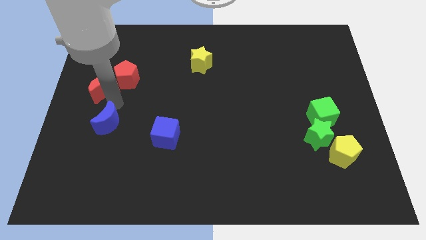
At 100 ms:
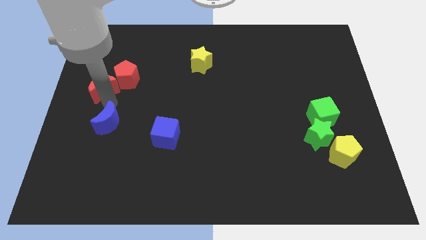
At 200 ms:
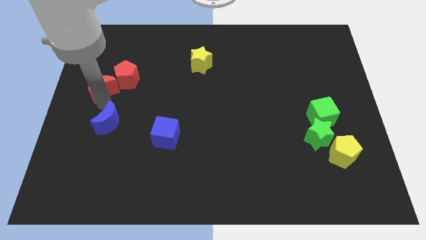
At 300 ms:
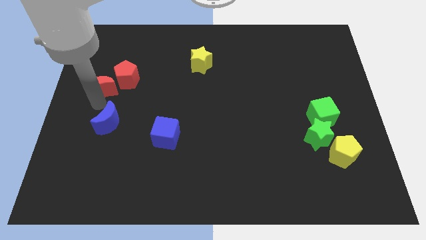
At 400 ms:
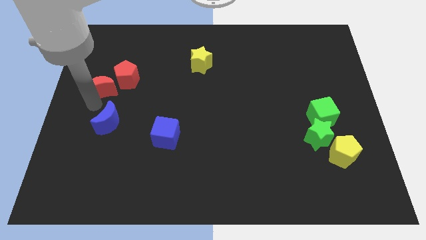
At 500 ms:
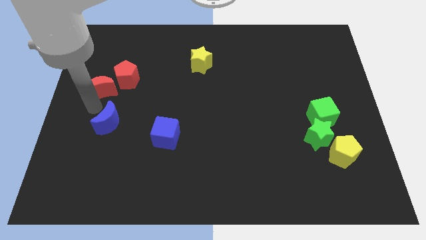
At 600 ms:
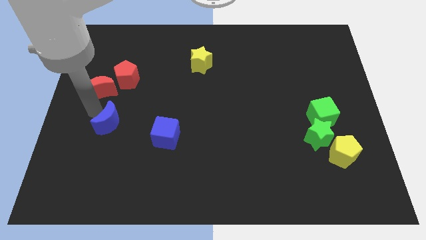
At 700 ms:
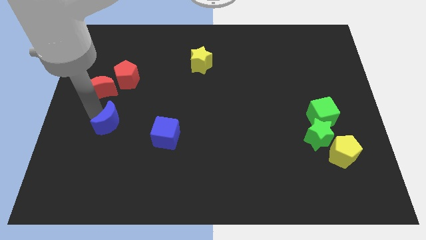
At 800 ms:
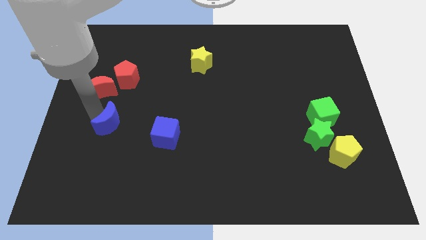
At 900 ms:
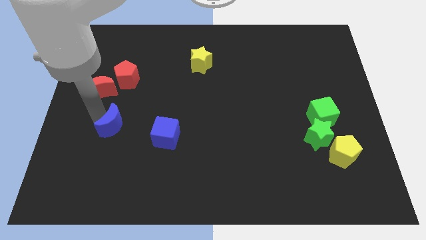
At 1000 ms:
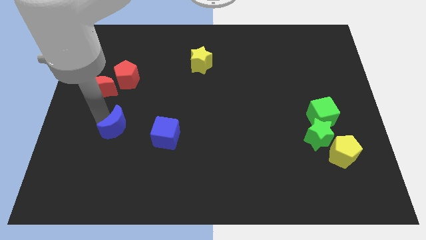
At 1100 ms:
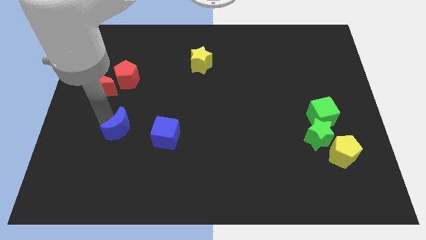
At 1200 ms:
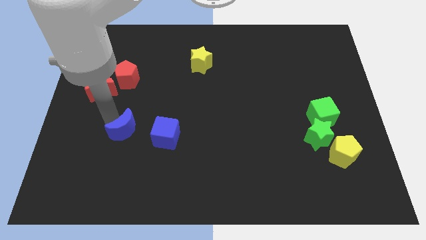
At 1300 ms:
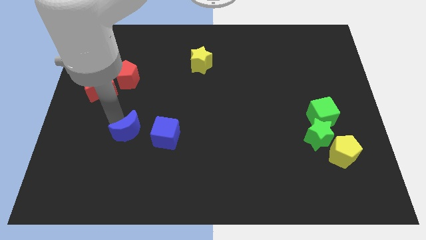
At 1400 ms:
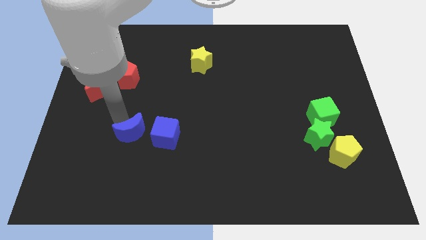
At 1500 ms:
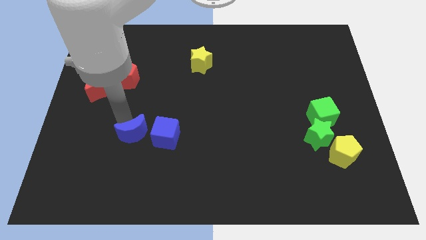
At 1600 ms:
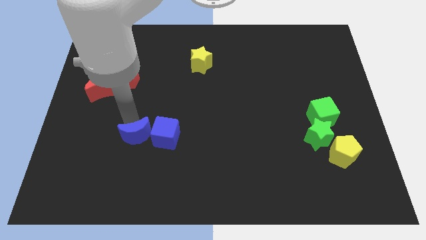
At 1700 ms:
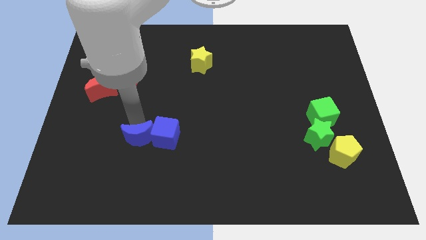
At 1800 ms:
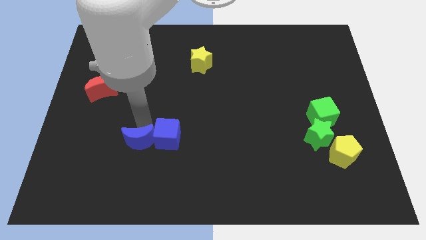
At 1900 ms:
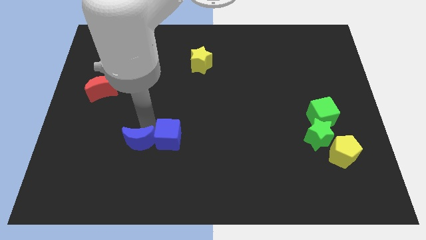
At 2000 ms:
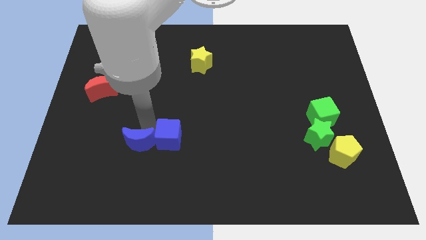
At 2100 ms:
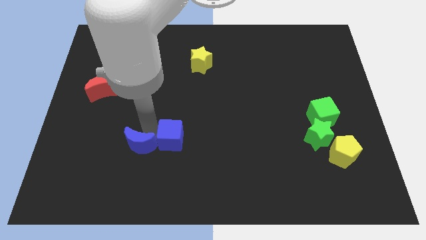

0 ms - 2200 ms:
slide the blue moon into the blue cube

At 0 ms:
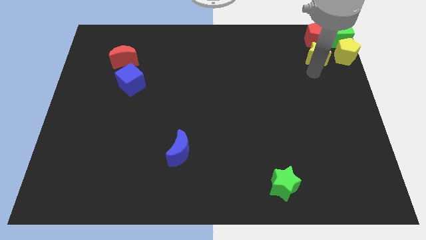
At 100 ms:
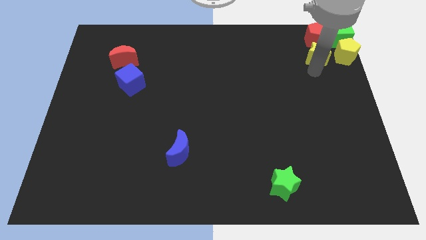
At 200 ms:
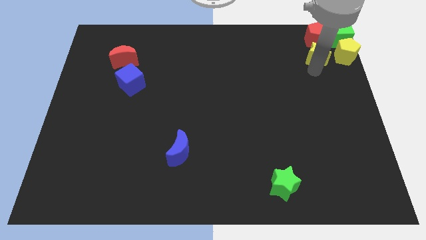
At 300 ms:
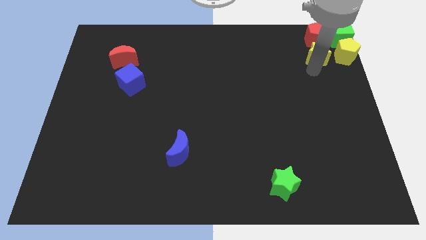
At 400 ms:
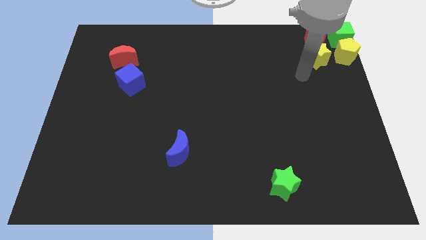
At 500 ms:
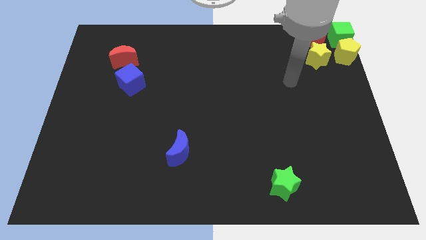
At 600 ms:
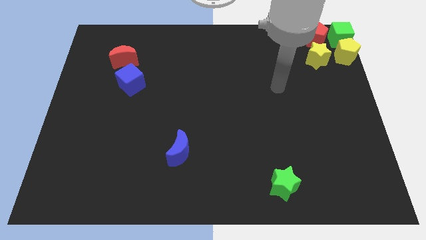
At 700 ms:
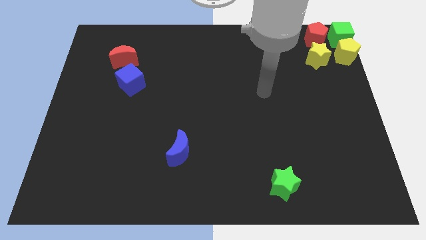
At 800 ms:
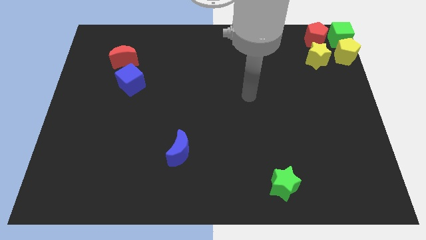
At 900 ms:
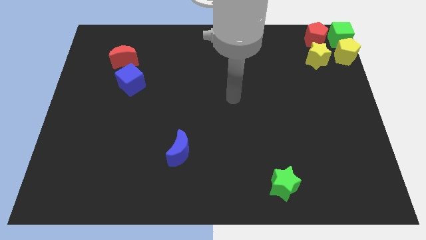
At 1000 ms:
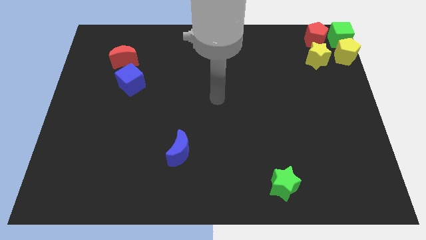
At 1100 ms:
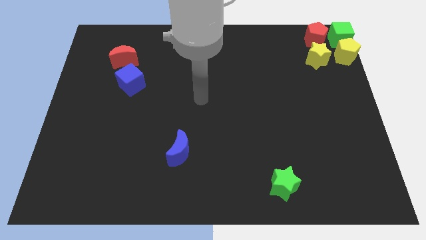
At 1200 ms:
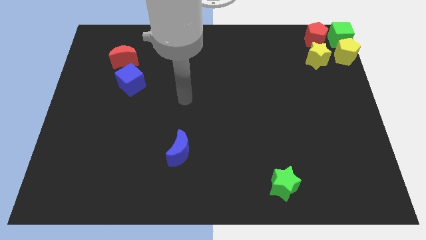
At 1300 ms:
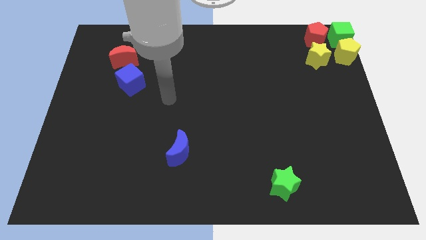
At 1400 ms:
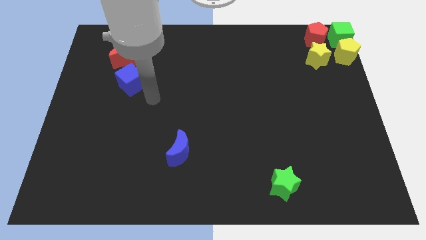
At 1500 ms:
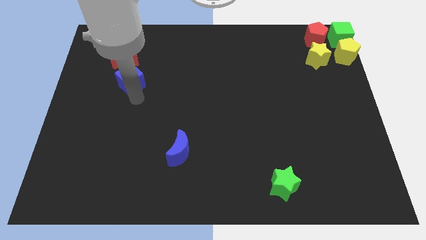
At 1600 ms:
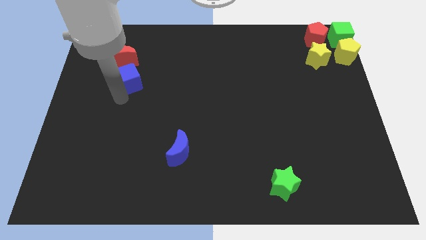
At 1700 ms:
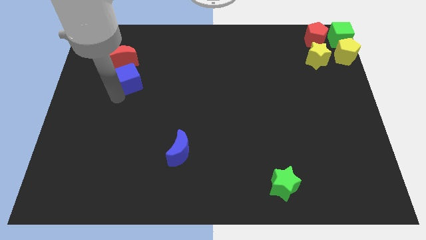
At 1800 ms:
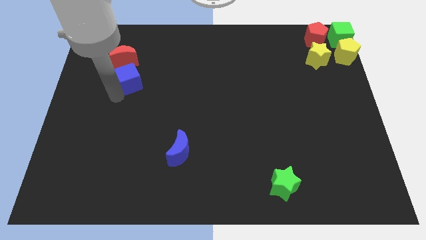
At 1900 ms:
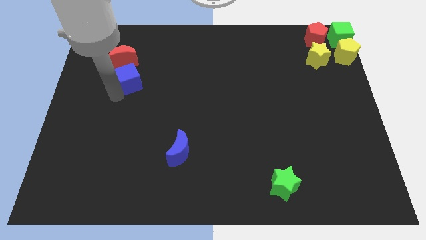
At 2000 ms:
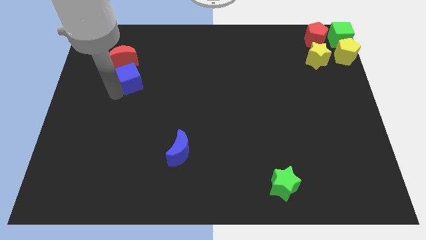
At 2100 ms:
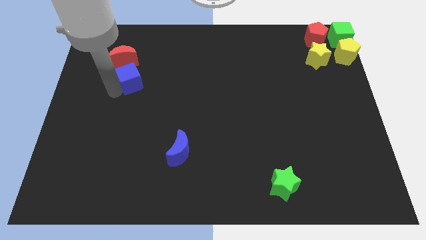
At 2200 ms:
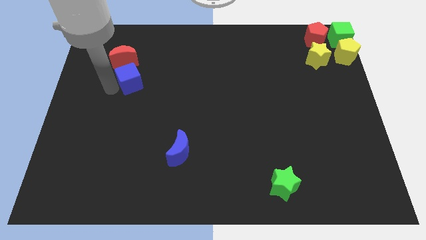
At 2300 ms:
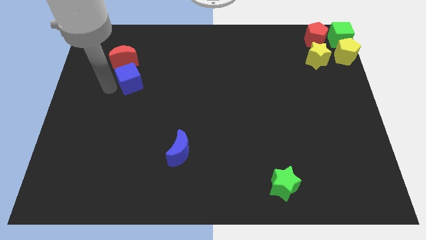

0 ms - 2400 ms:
place your hand to the left of blue cube

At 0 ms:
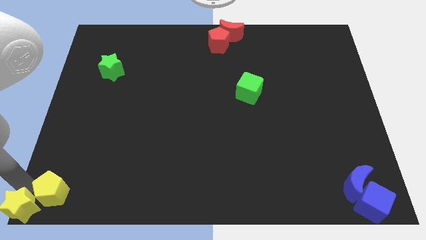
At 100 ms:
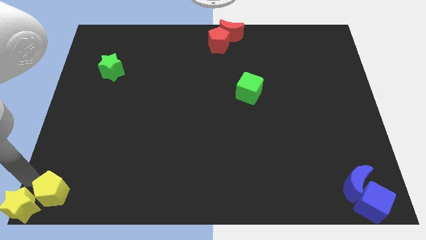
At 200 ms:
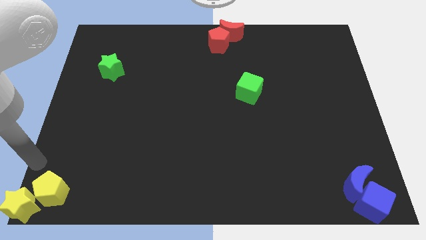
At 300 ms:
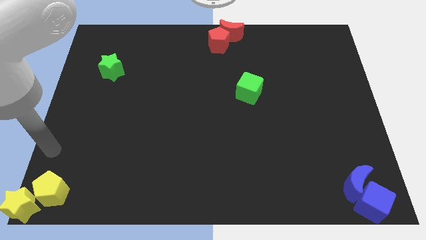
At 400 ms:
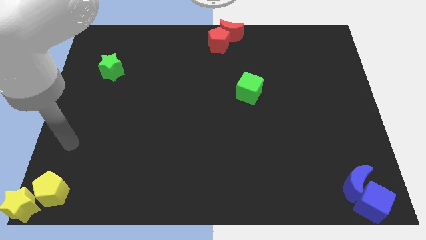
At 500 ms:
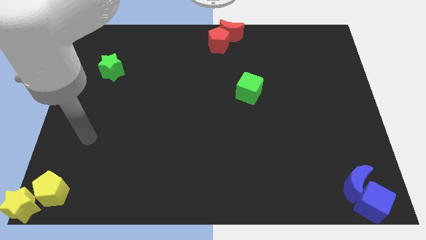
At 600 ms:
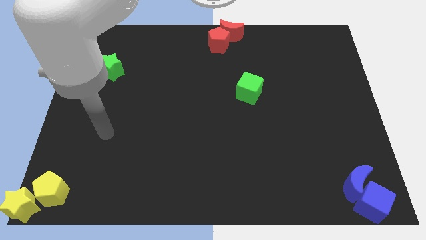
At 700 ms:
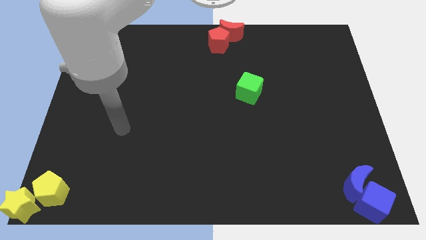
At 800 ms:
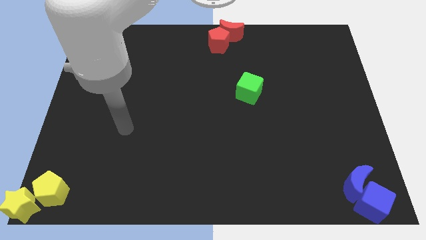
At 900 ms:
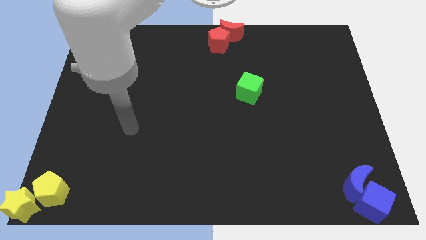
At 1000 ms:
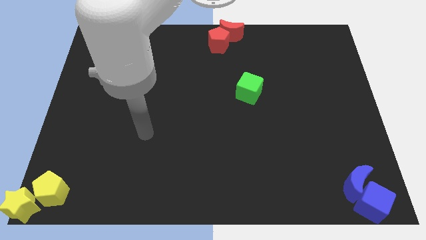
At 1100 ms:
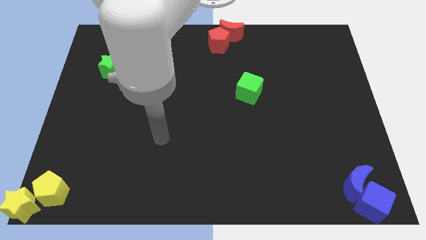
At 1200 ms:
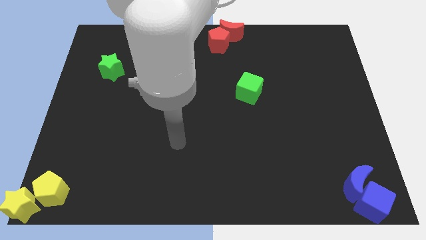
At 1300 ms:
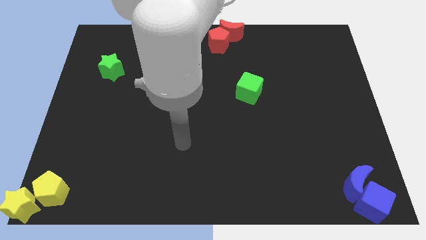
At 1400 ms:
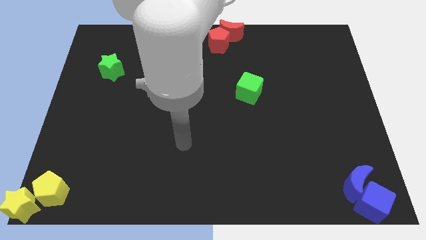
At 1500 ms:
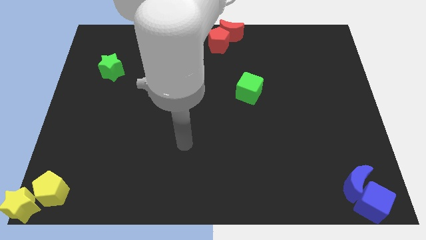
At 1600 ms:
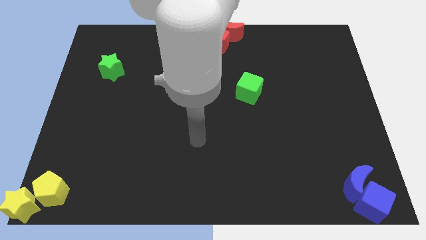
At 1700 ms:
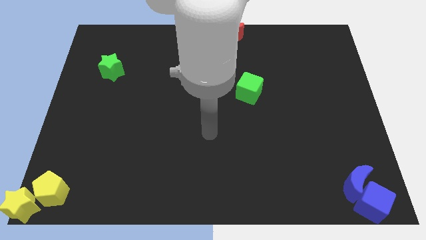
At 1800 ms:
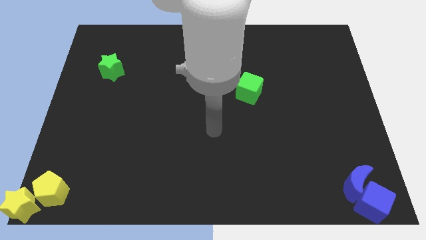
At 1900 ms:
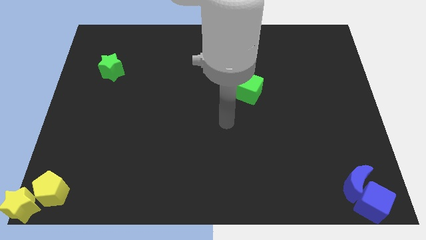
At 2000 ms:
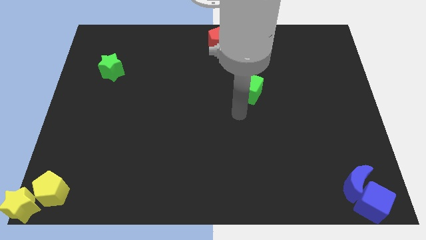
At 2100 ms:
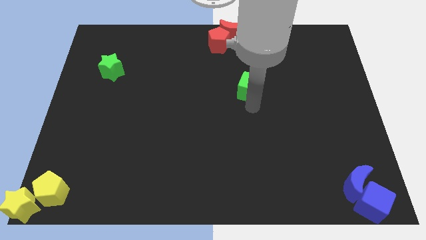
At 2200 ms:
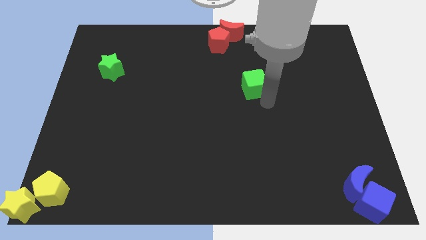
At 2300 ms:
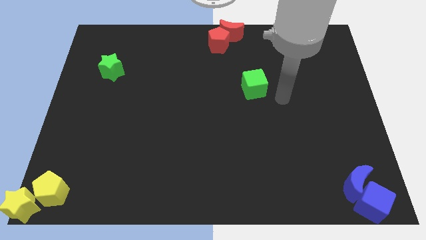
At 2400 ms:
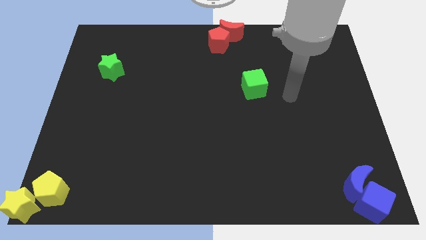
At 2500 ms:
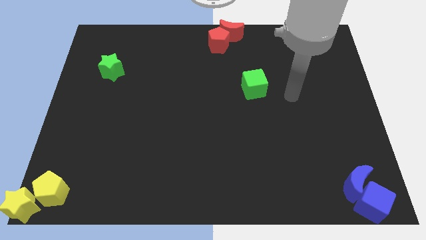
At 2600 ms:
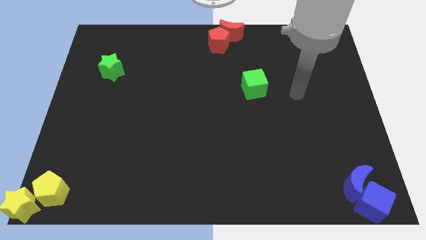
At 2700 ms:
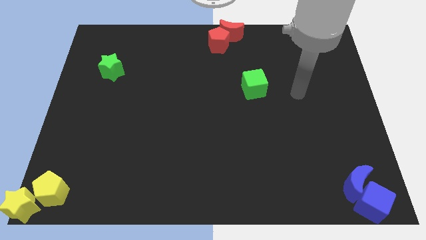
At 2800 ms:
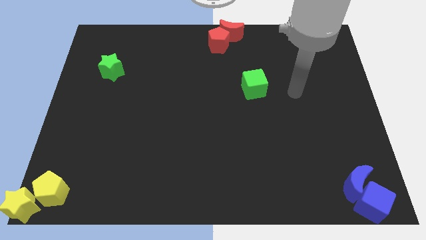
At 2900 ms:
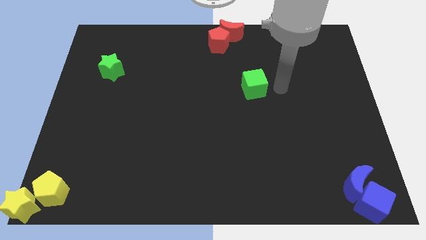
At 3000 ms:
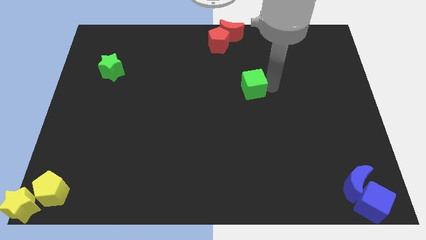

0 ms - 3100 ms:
go away from the yellow pentagon and yellow star

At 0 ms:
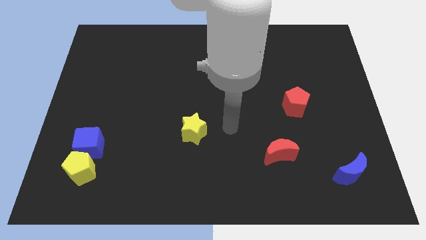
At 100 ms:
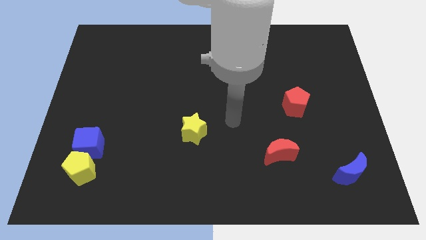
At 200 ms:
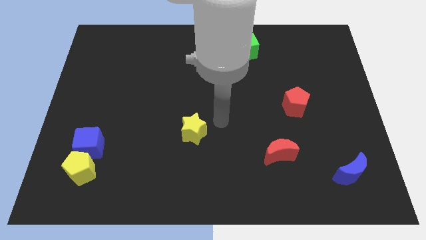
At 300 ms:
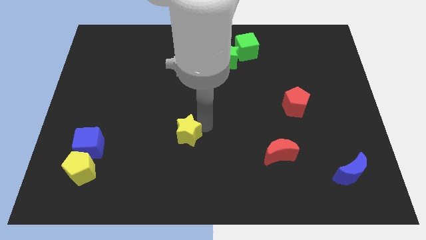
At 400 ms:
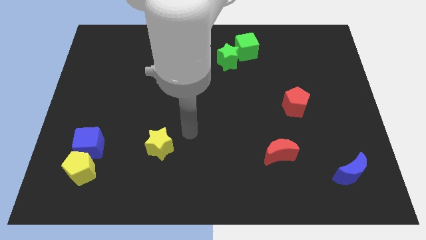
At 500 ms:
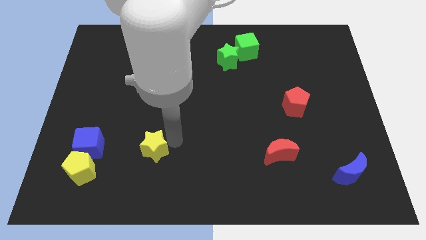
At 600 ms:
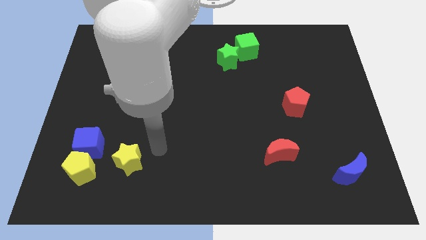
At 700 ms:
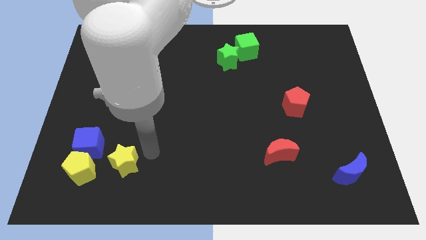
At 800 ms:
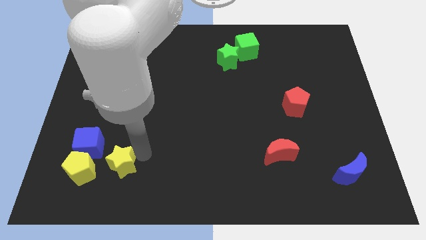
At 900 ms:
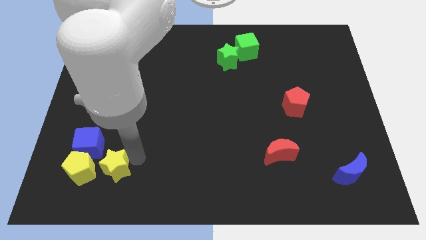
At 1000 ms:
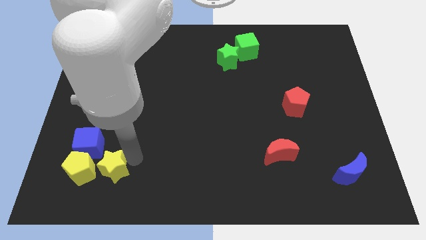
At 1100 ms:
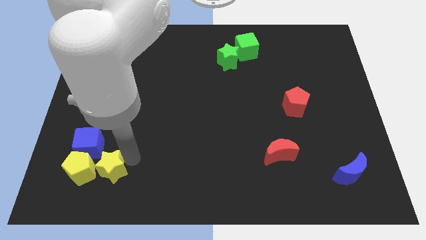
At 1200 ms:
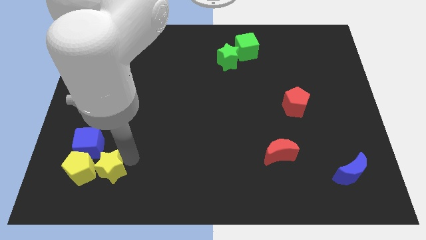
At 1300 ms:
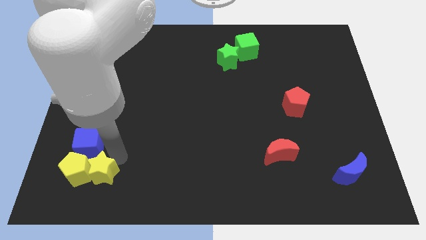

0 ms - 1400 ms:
push the yellow star into the yellow pentagon
